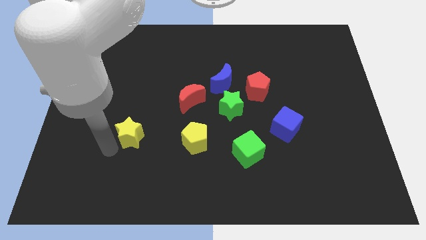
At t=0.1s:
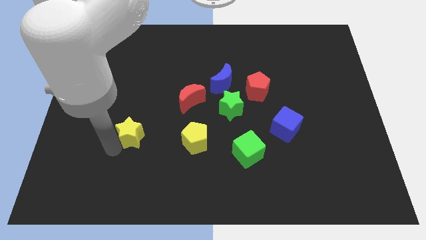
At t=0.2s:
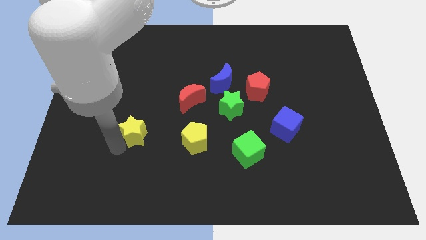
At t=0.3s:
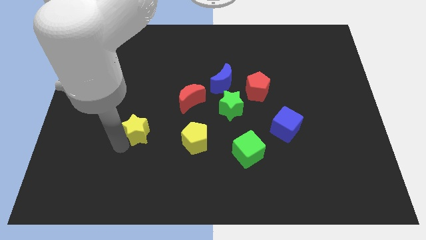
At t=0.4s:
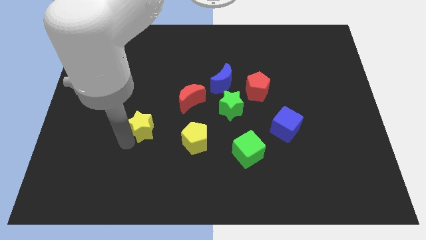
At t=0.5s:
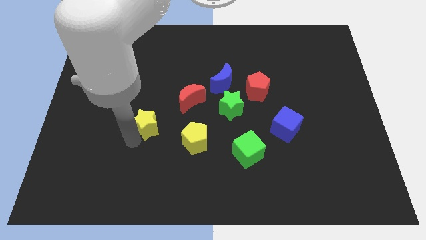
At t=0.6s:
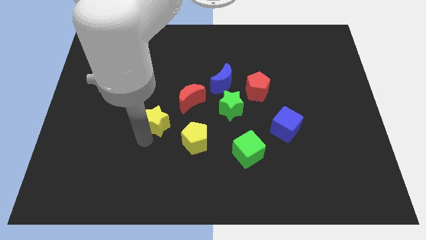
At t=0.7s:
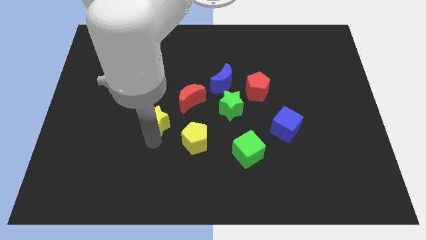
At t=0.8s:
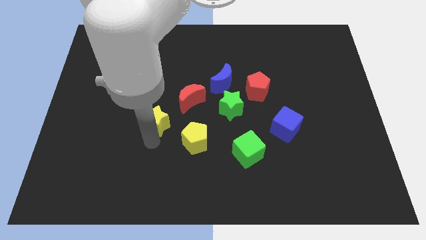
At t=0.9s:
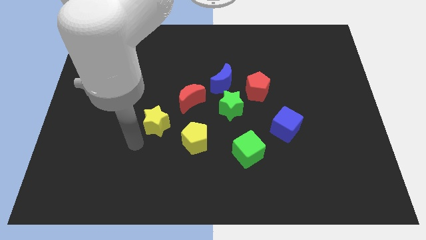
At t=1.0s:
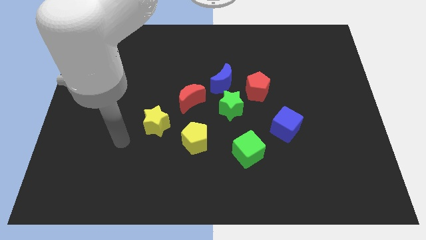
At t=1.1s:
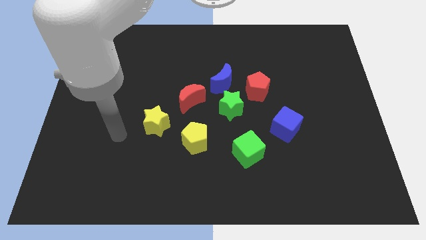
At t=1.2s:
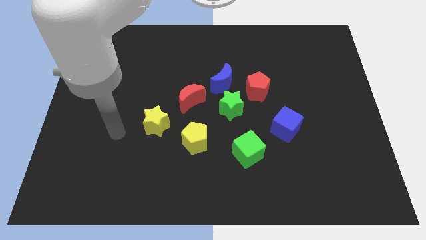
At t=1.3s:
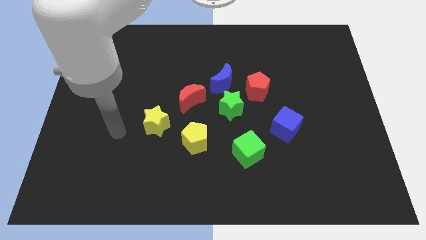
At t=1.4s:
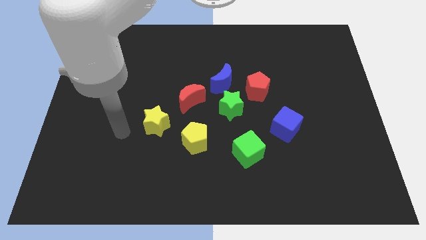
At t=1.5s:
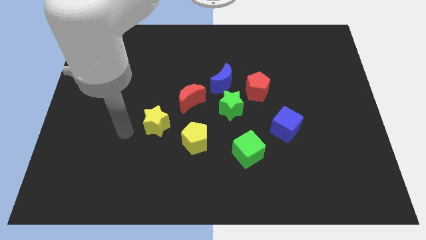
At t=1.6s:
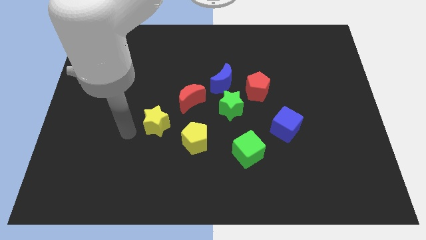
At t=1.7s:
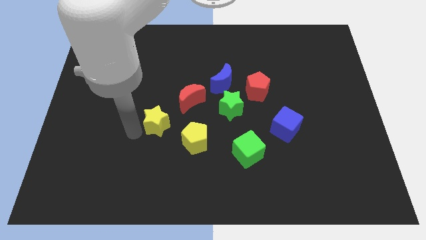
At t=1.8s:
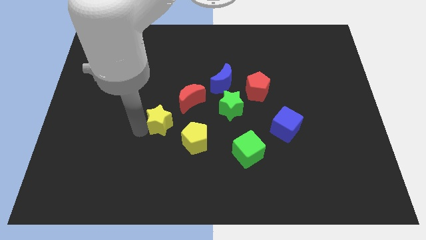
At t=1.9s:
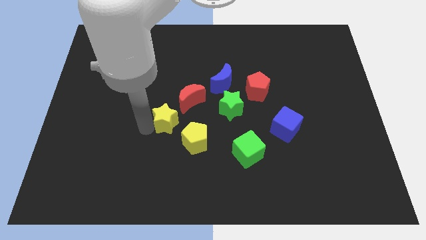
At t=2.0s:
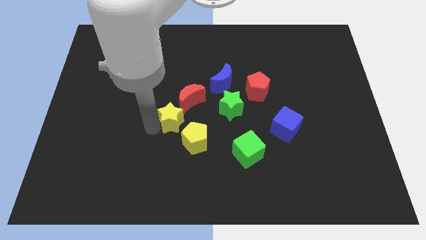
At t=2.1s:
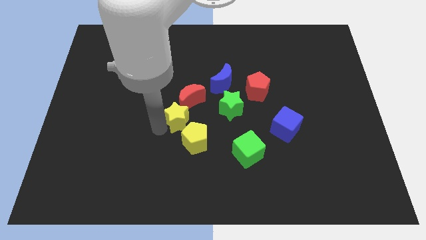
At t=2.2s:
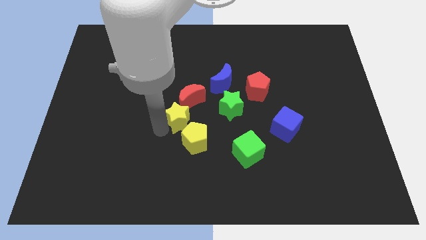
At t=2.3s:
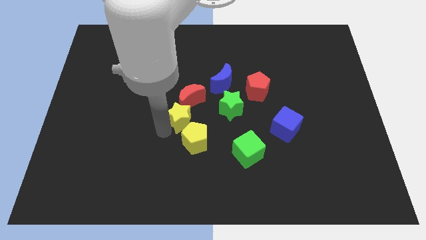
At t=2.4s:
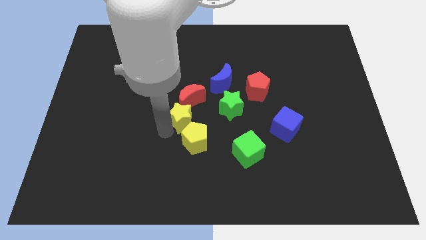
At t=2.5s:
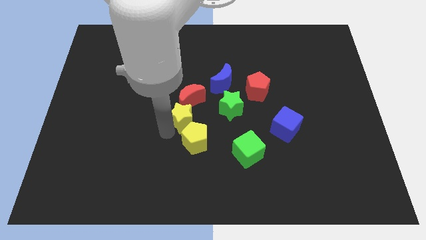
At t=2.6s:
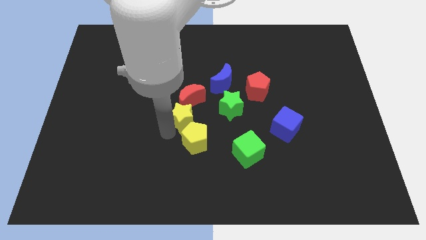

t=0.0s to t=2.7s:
push the yellow star into the yellow pentagon

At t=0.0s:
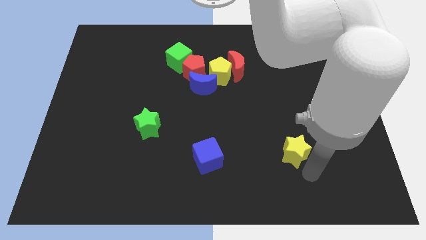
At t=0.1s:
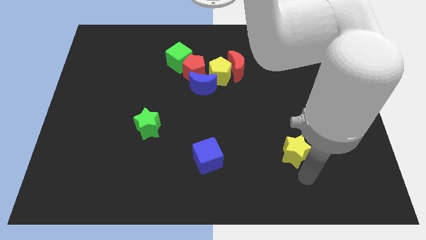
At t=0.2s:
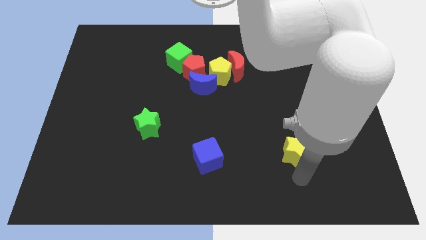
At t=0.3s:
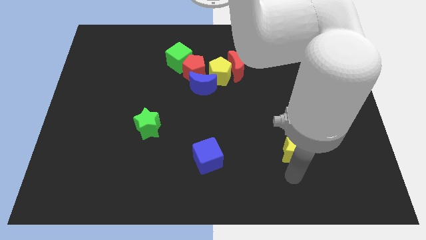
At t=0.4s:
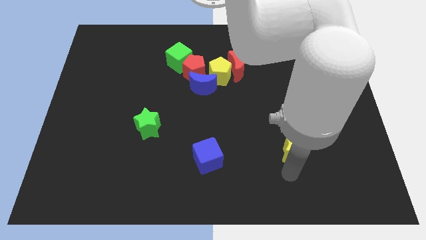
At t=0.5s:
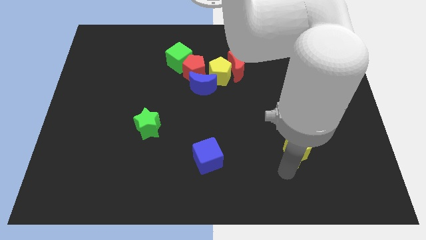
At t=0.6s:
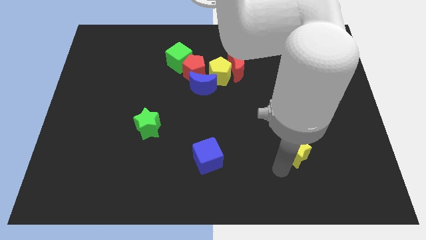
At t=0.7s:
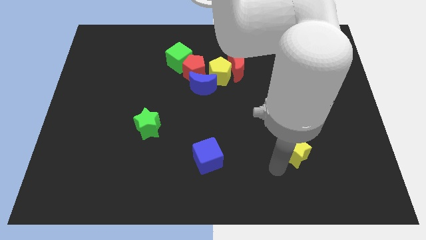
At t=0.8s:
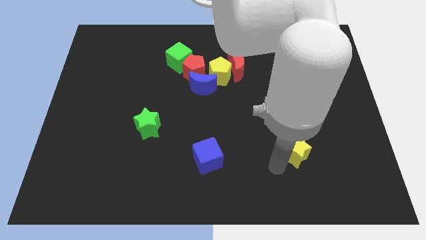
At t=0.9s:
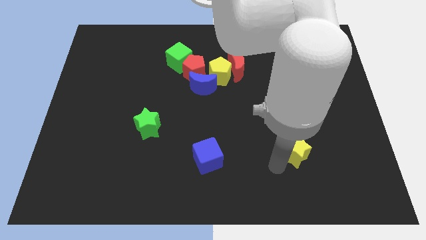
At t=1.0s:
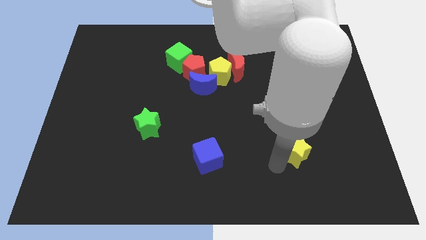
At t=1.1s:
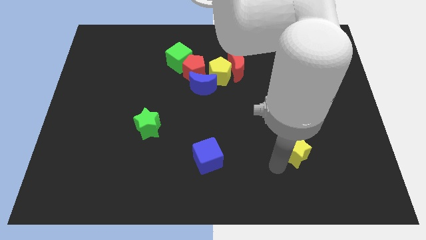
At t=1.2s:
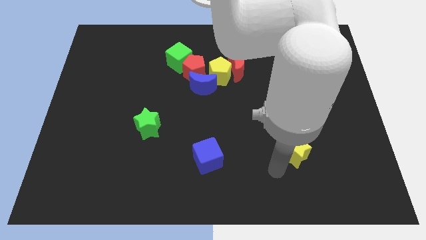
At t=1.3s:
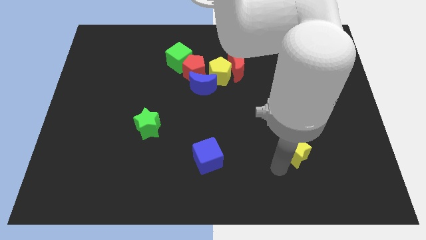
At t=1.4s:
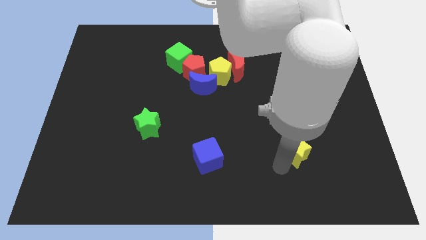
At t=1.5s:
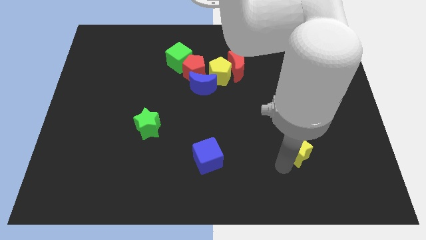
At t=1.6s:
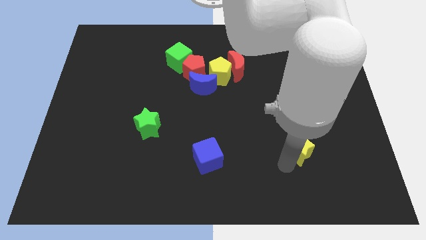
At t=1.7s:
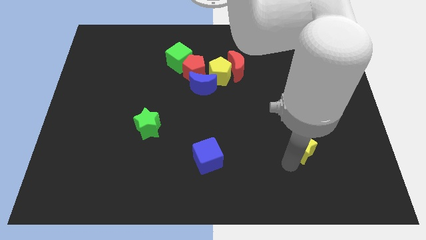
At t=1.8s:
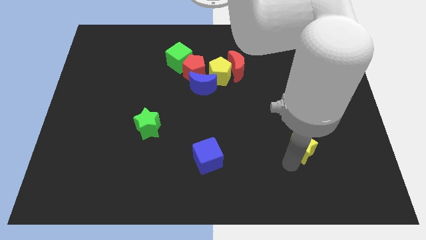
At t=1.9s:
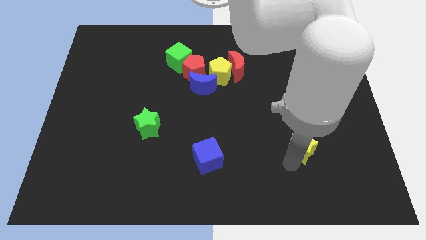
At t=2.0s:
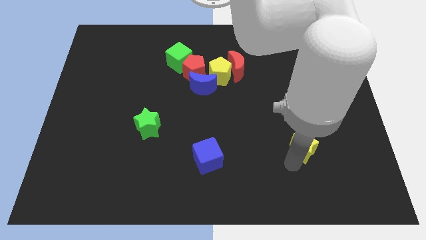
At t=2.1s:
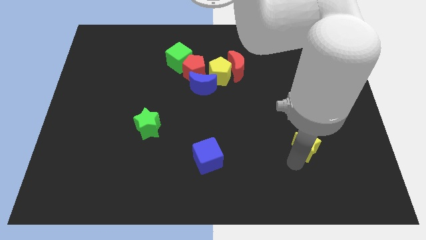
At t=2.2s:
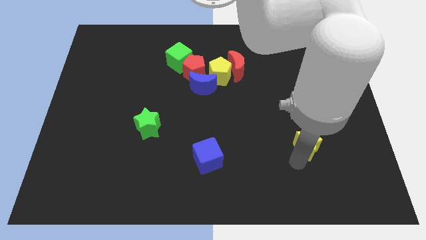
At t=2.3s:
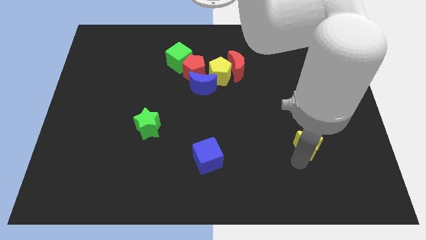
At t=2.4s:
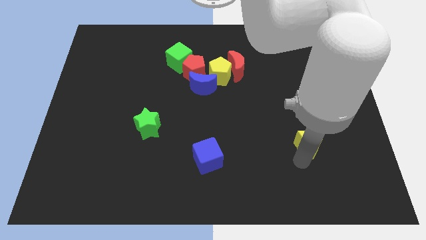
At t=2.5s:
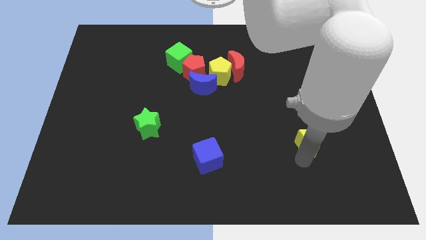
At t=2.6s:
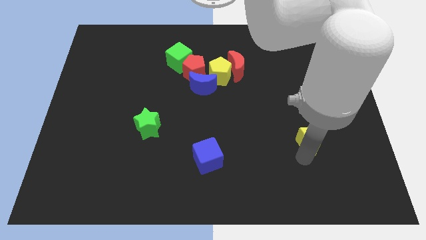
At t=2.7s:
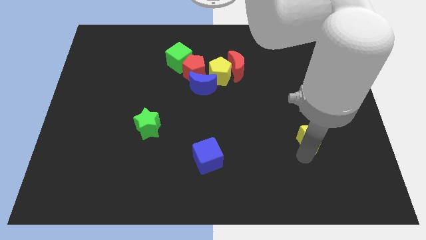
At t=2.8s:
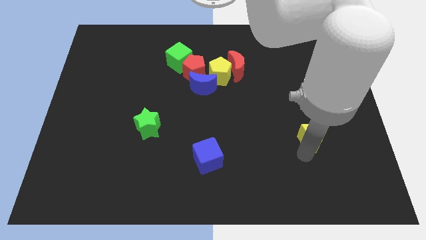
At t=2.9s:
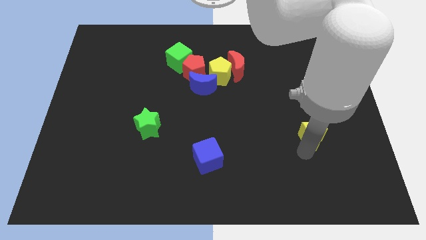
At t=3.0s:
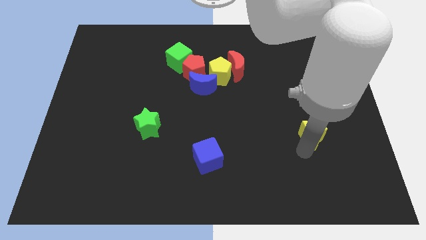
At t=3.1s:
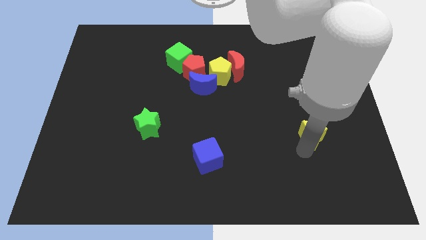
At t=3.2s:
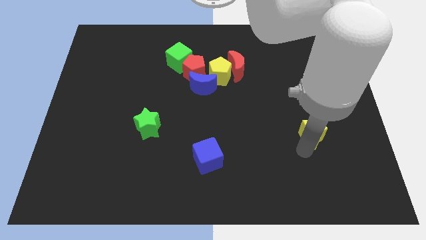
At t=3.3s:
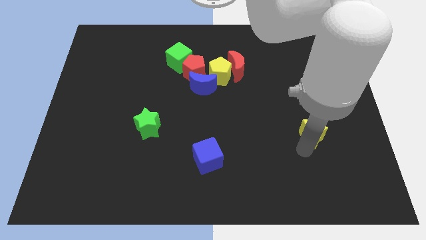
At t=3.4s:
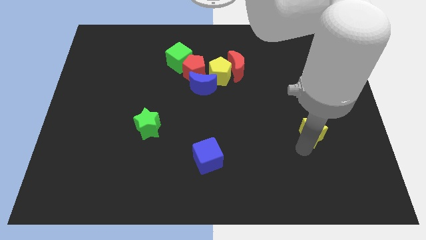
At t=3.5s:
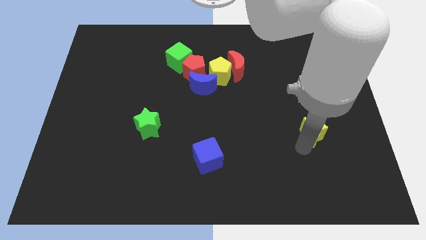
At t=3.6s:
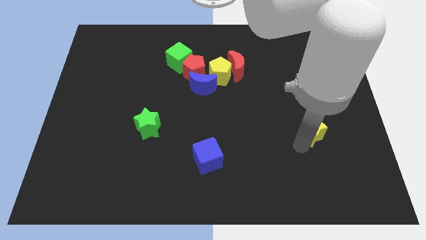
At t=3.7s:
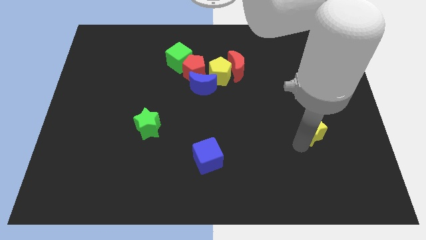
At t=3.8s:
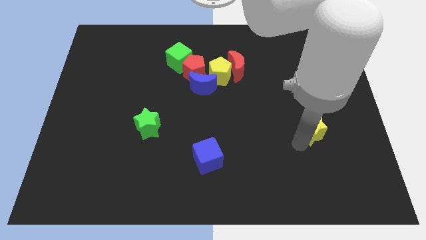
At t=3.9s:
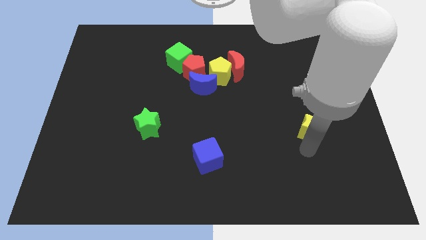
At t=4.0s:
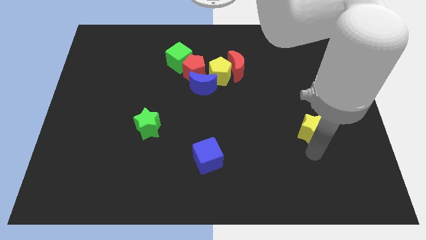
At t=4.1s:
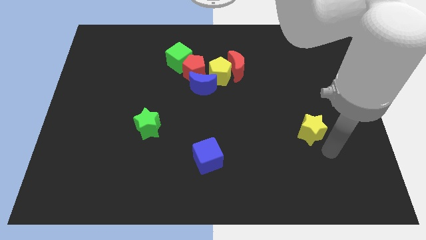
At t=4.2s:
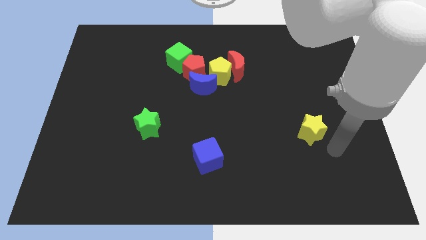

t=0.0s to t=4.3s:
move the yellow star upwards

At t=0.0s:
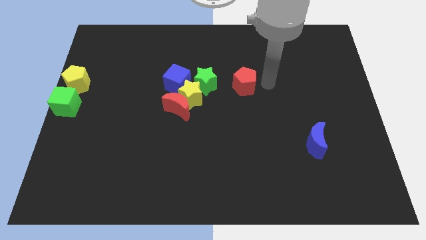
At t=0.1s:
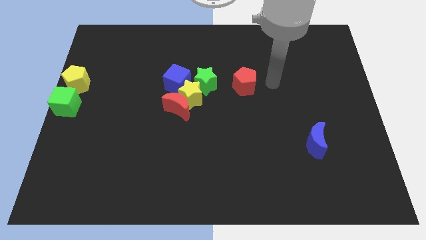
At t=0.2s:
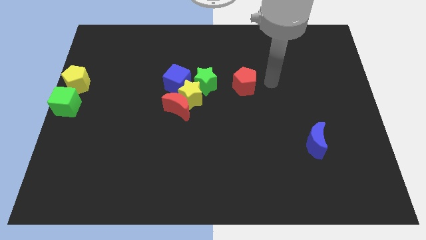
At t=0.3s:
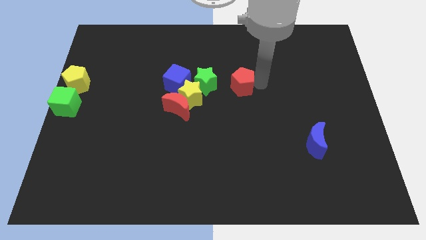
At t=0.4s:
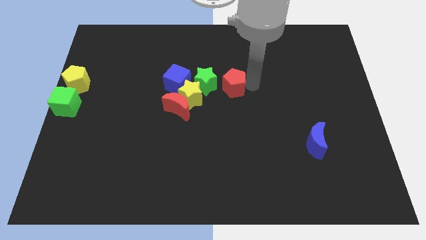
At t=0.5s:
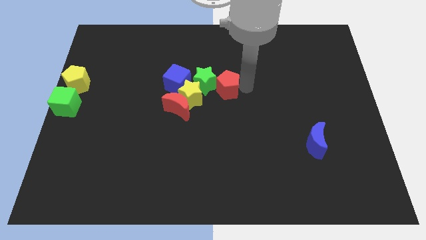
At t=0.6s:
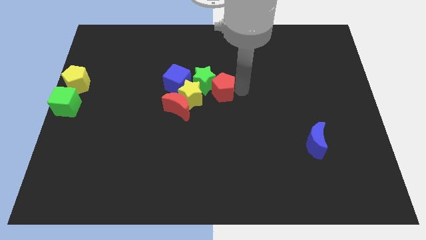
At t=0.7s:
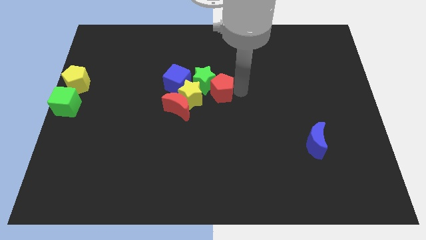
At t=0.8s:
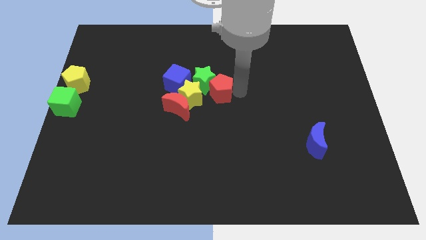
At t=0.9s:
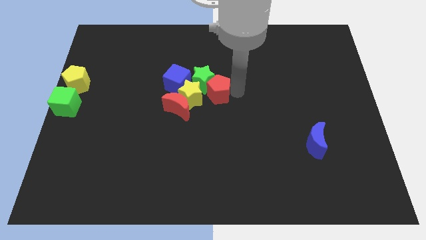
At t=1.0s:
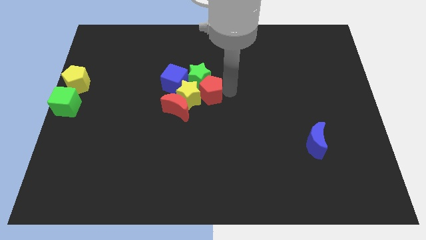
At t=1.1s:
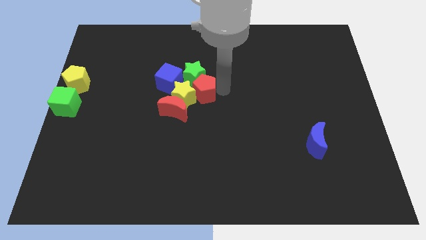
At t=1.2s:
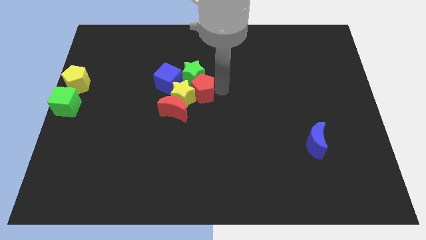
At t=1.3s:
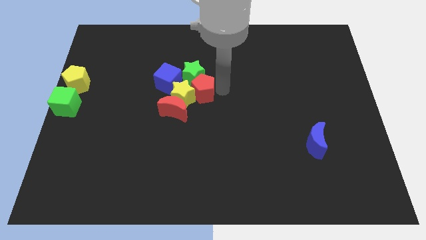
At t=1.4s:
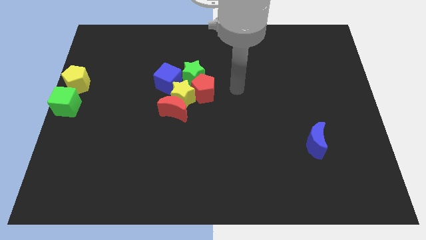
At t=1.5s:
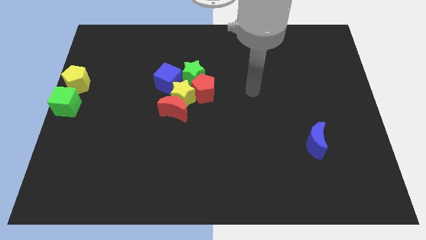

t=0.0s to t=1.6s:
push red pentagon into yellow and green star

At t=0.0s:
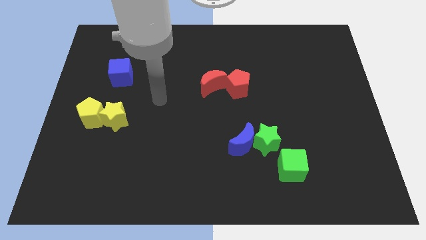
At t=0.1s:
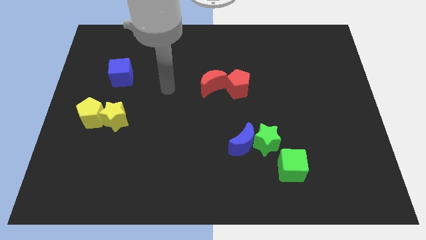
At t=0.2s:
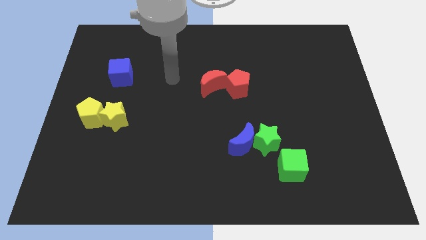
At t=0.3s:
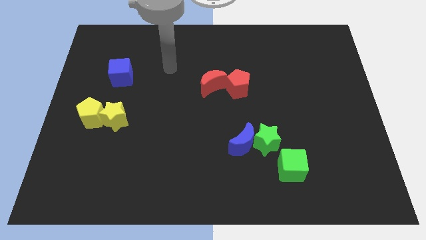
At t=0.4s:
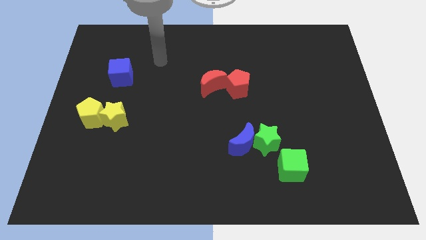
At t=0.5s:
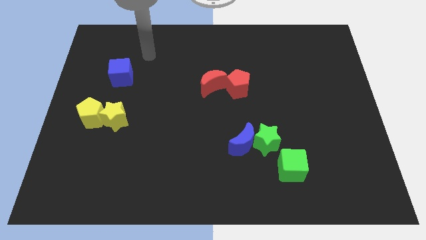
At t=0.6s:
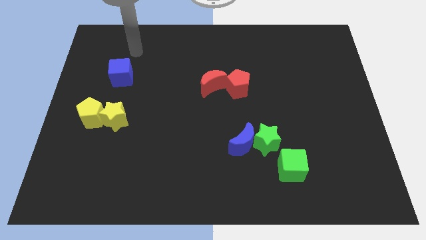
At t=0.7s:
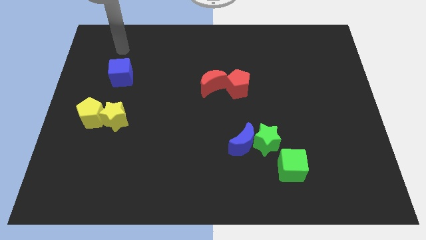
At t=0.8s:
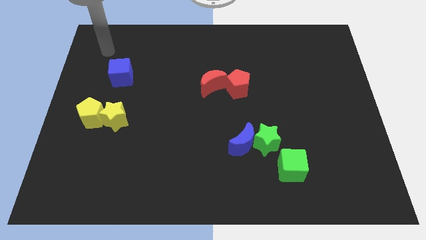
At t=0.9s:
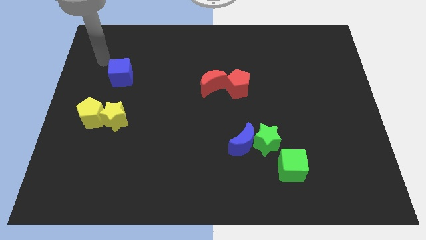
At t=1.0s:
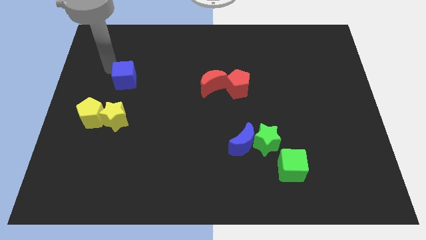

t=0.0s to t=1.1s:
move your arm to the top of the blue cube
